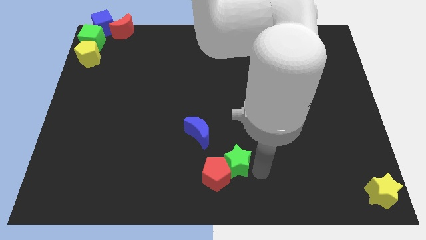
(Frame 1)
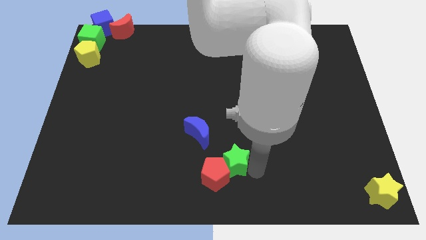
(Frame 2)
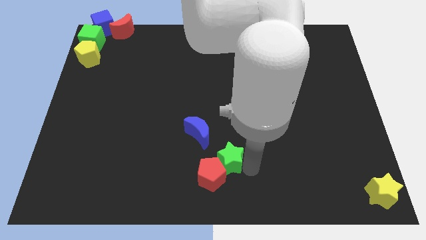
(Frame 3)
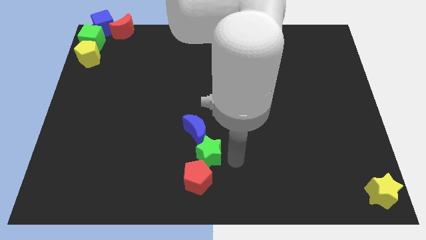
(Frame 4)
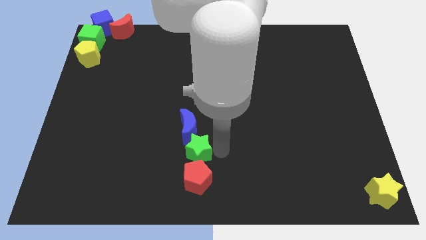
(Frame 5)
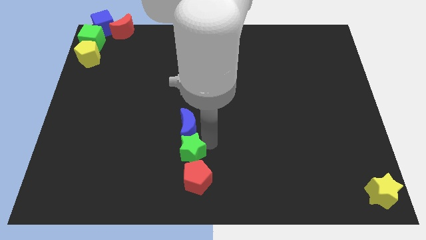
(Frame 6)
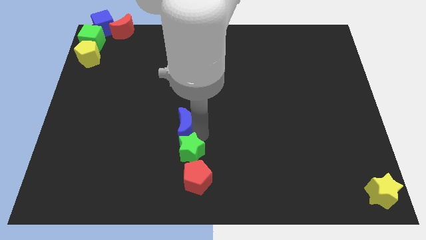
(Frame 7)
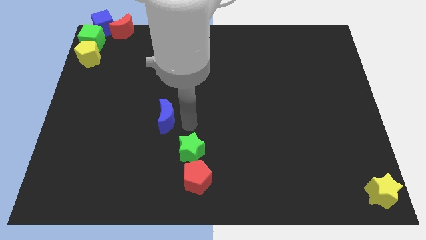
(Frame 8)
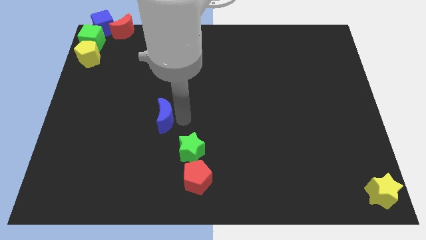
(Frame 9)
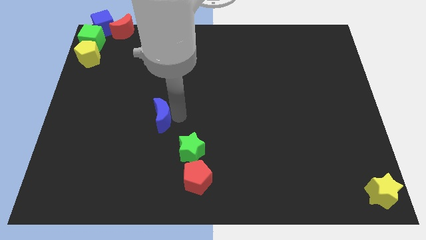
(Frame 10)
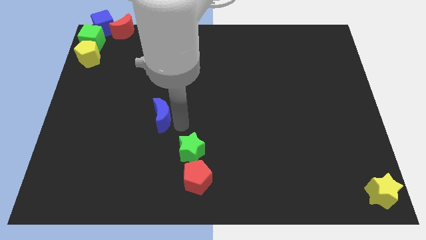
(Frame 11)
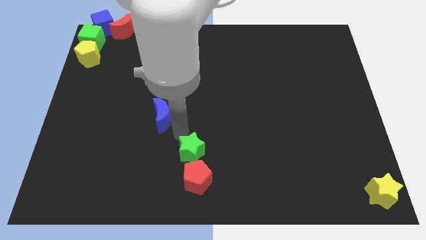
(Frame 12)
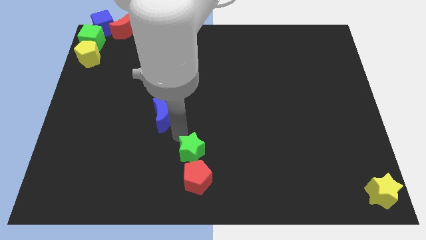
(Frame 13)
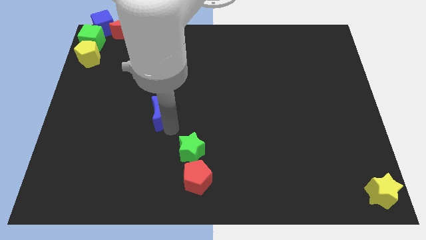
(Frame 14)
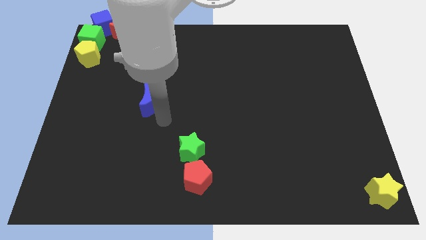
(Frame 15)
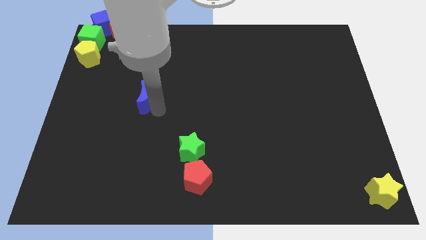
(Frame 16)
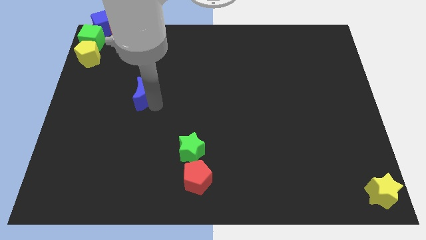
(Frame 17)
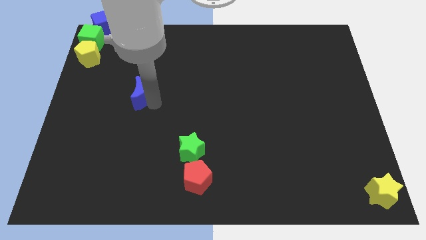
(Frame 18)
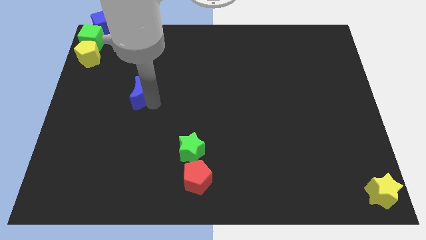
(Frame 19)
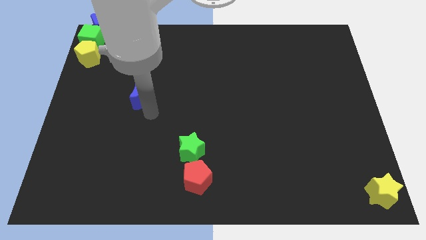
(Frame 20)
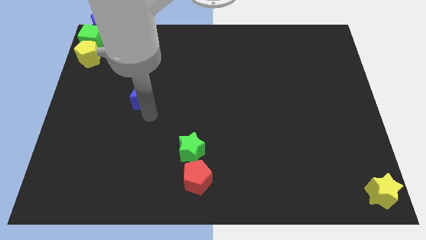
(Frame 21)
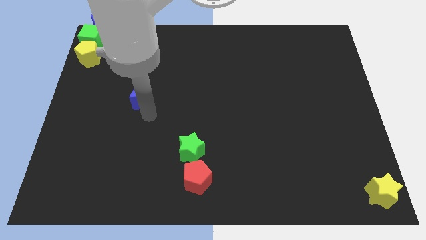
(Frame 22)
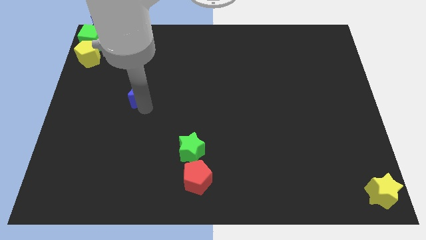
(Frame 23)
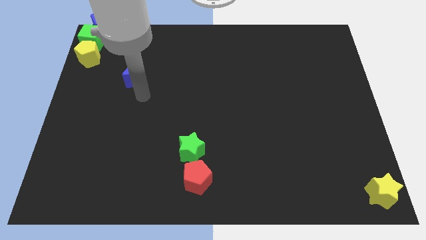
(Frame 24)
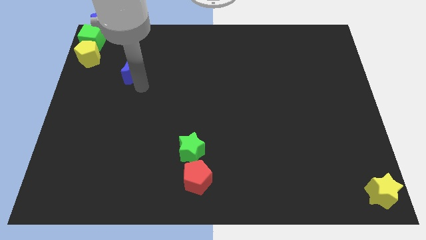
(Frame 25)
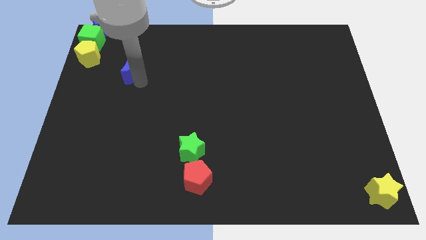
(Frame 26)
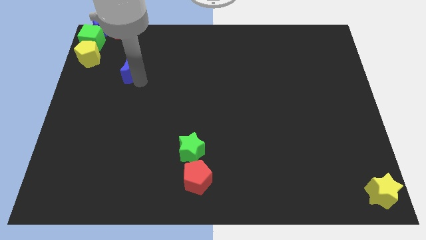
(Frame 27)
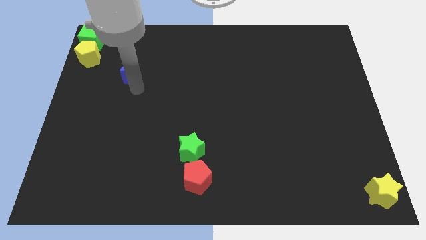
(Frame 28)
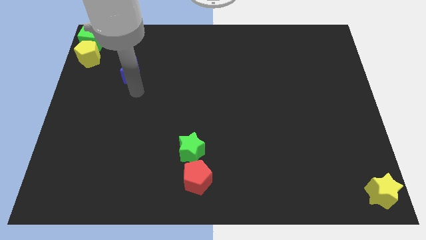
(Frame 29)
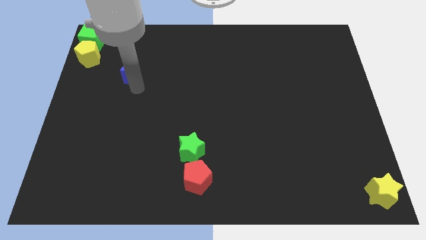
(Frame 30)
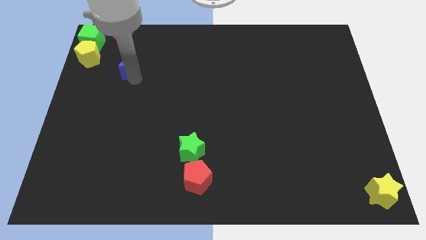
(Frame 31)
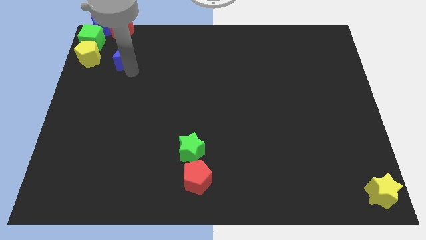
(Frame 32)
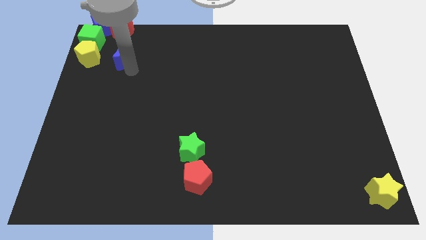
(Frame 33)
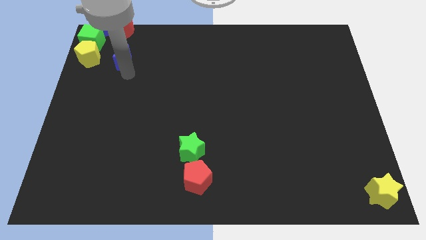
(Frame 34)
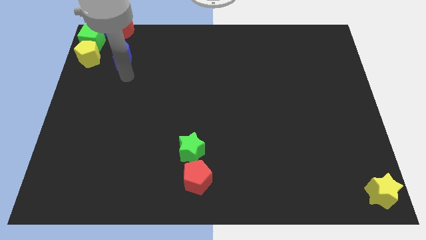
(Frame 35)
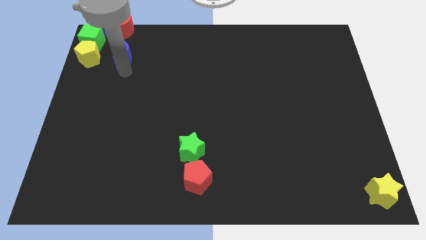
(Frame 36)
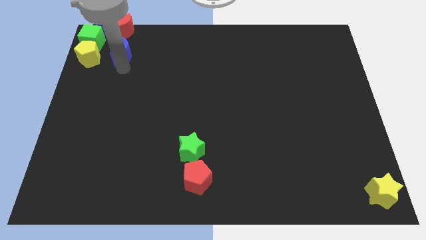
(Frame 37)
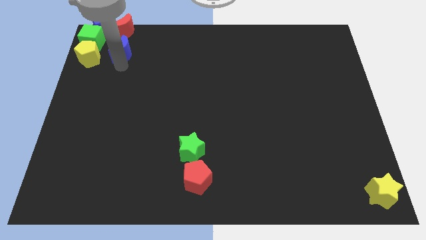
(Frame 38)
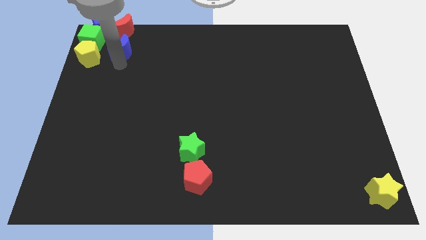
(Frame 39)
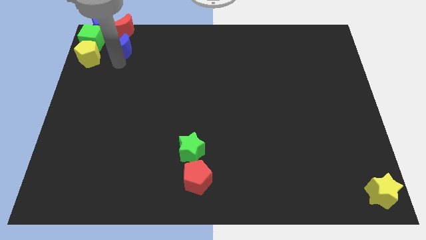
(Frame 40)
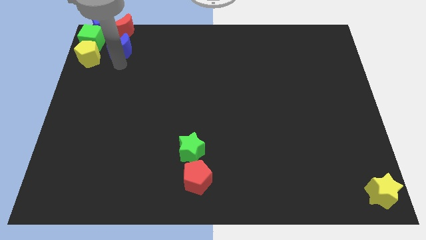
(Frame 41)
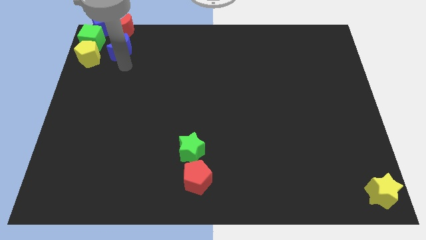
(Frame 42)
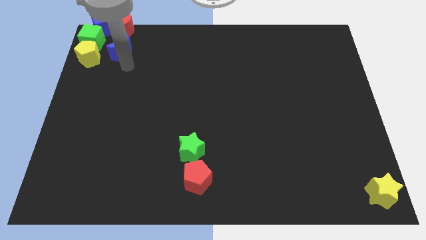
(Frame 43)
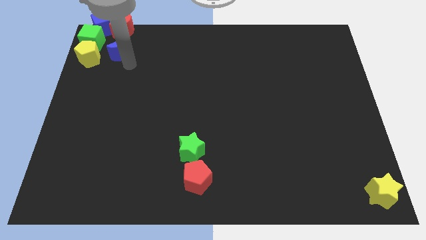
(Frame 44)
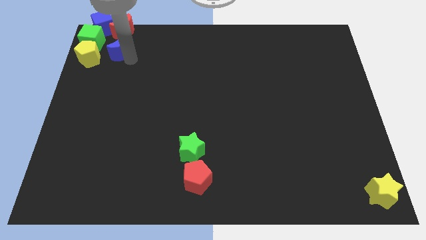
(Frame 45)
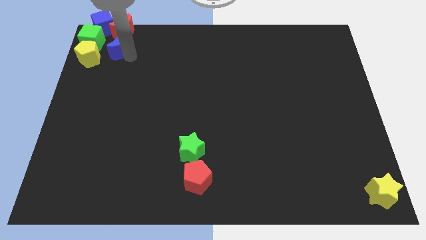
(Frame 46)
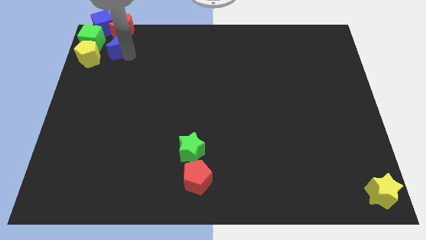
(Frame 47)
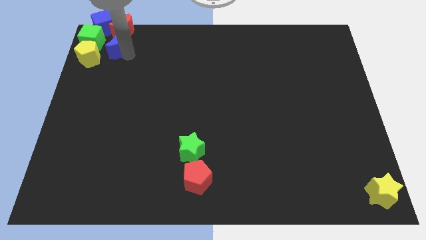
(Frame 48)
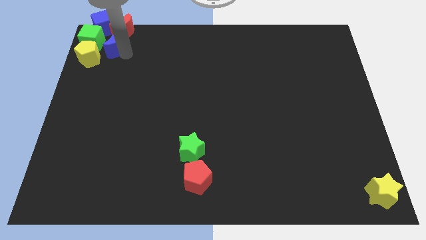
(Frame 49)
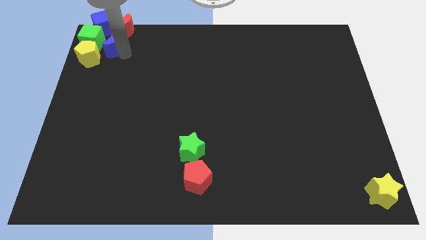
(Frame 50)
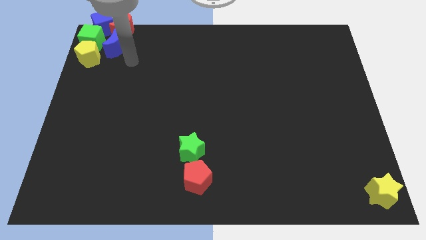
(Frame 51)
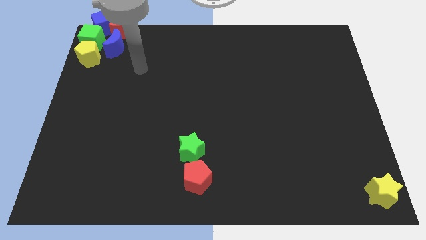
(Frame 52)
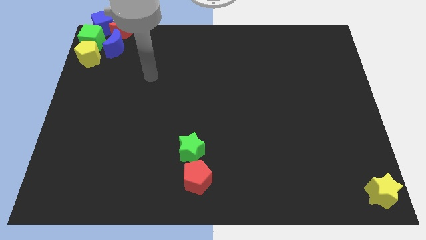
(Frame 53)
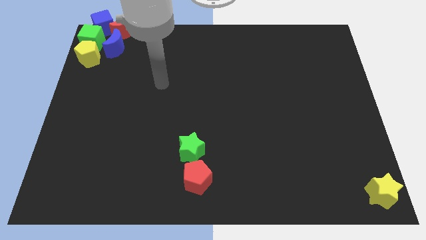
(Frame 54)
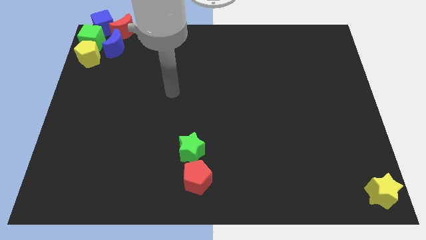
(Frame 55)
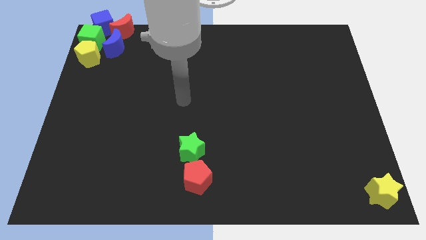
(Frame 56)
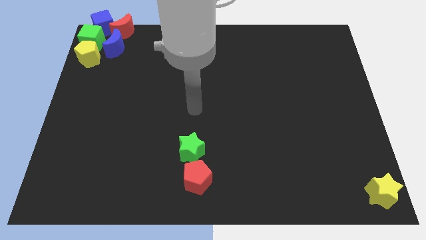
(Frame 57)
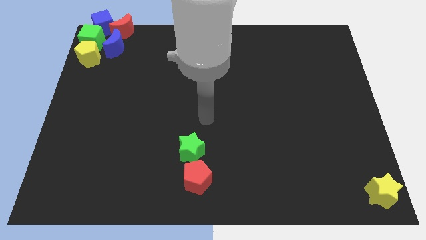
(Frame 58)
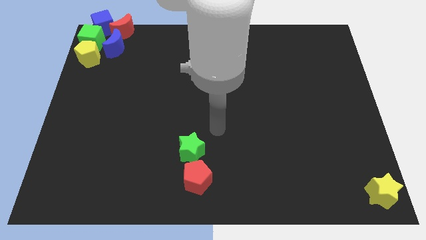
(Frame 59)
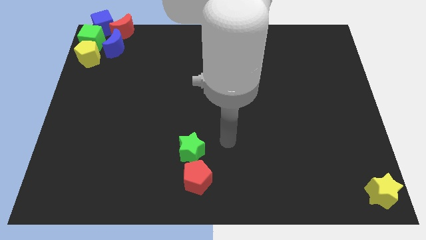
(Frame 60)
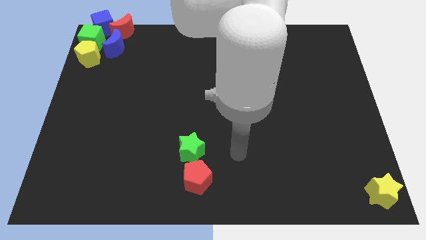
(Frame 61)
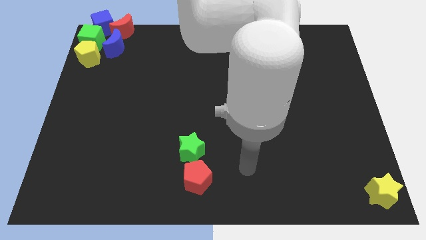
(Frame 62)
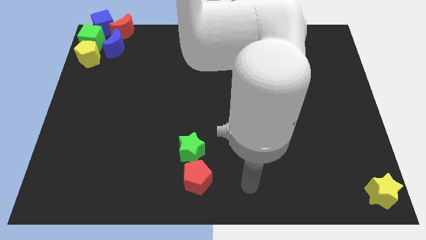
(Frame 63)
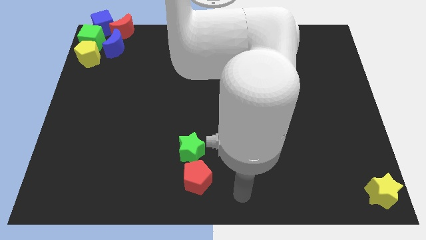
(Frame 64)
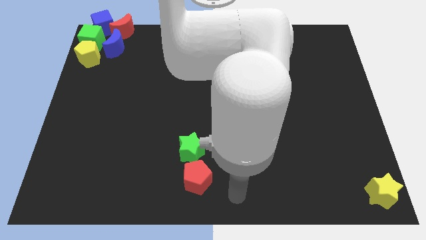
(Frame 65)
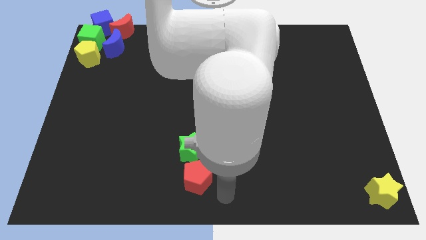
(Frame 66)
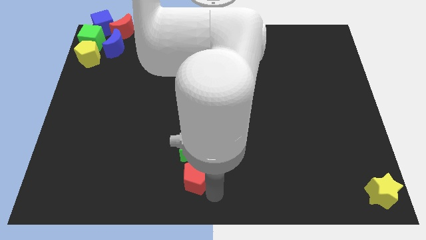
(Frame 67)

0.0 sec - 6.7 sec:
place the blue crescent near the red crescent

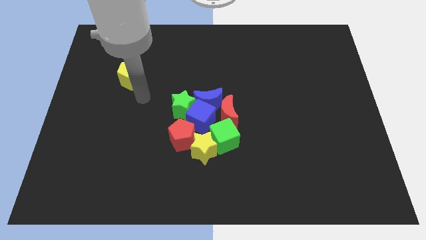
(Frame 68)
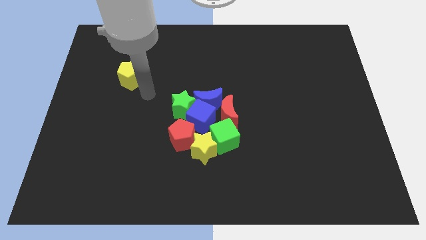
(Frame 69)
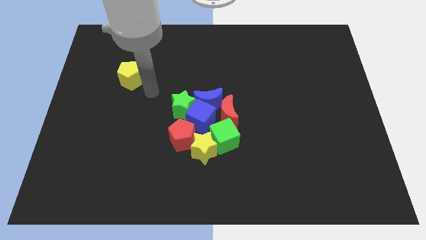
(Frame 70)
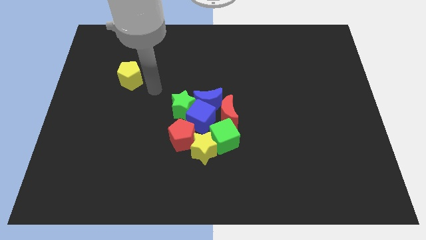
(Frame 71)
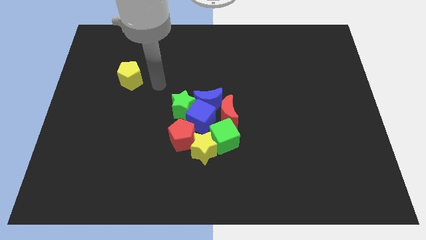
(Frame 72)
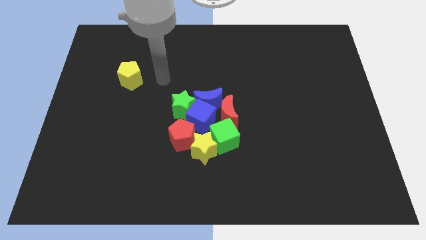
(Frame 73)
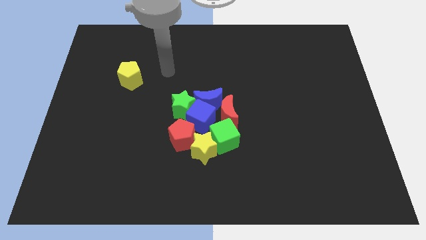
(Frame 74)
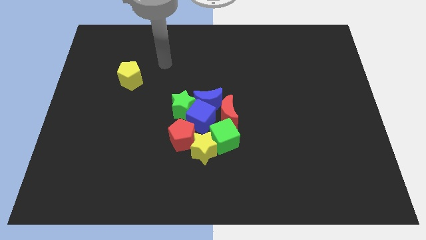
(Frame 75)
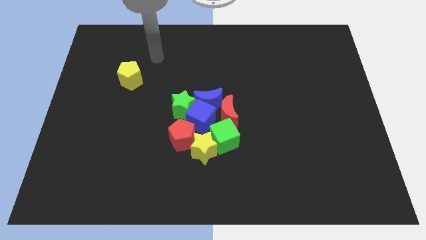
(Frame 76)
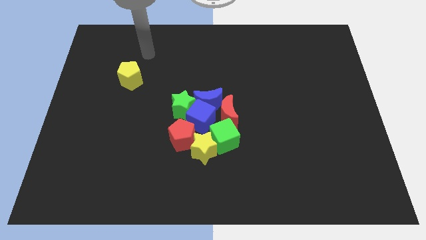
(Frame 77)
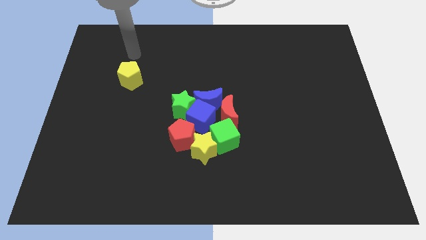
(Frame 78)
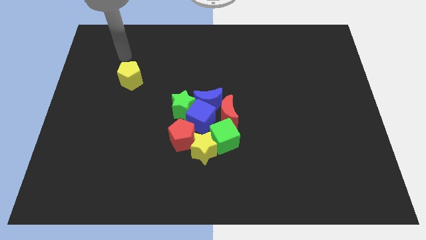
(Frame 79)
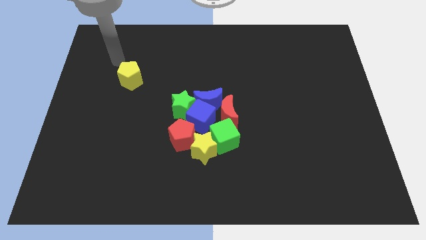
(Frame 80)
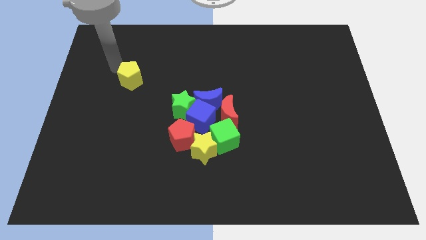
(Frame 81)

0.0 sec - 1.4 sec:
move arm towards the yellow pentagon

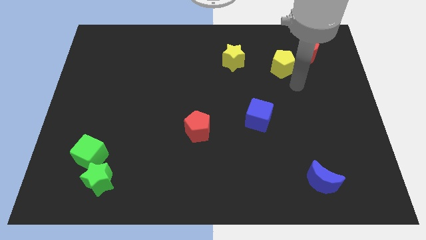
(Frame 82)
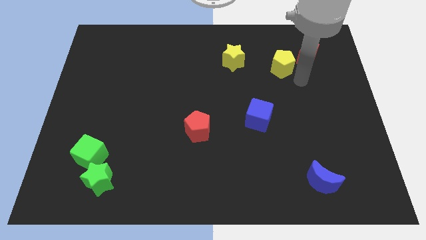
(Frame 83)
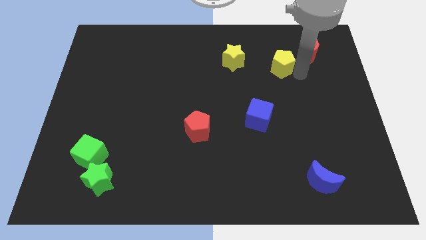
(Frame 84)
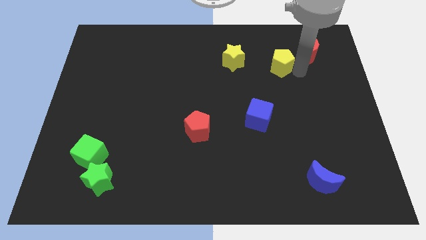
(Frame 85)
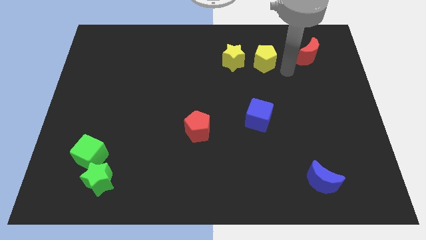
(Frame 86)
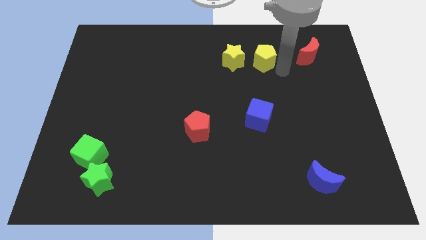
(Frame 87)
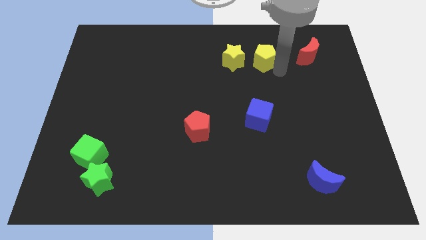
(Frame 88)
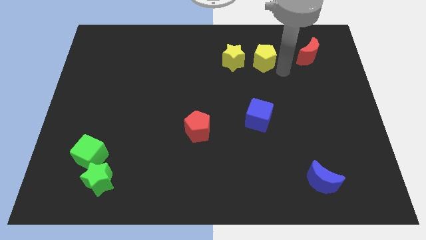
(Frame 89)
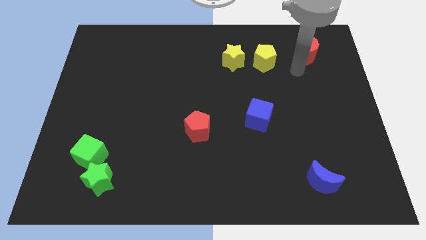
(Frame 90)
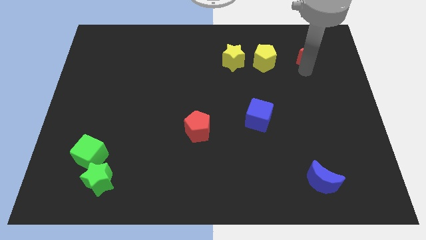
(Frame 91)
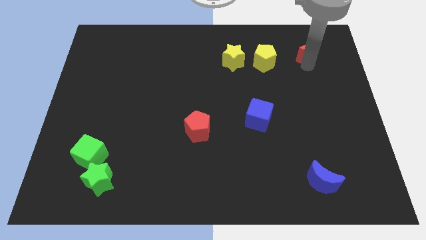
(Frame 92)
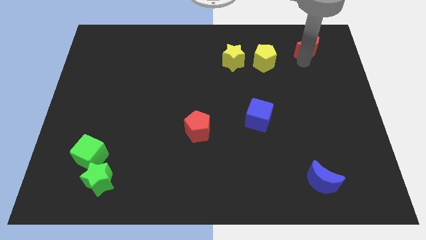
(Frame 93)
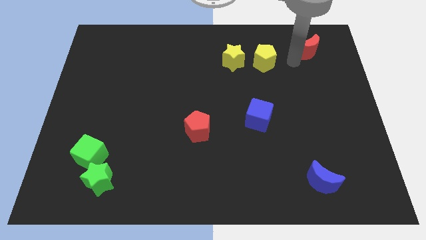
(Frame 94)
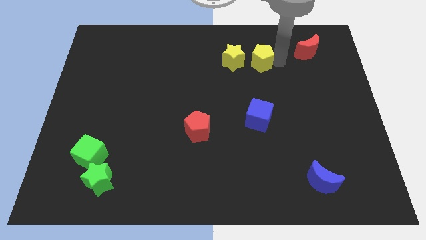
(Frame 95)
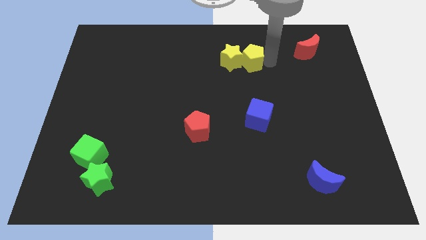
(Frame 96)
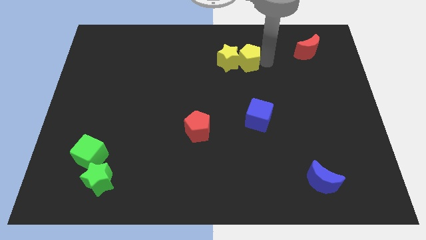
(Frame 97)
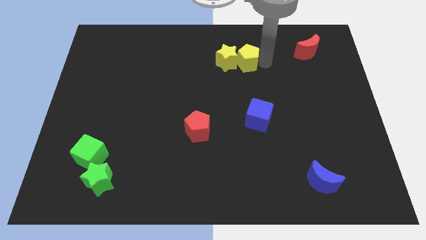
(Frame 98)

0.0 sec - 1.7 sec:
move the yellow pentagon towards the yellow star
